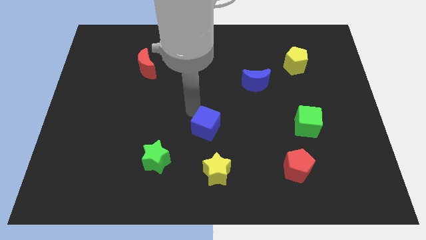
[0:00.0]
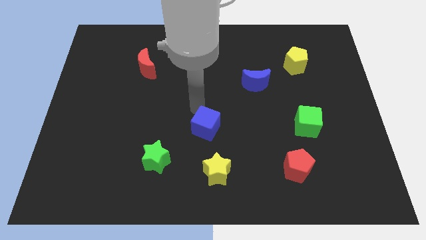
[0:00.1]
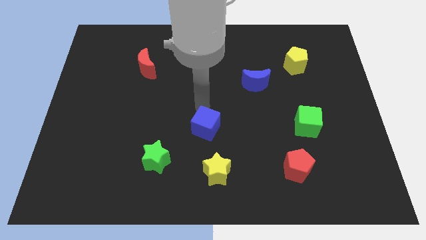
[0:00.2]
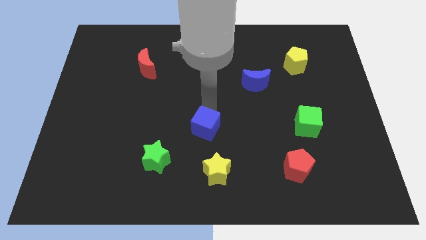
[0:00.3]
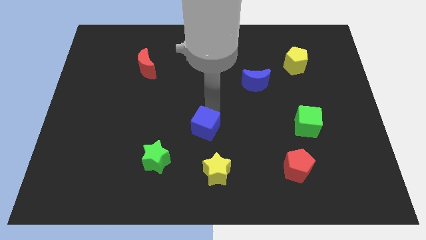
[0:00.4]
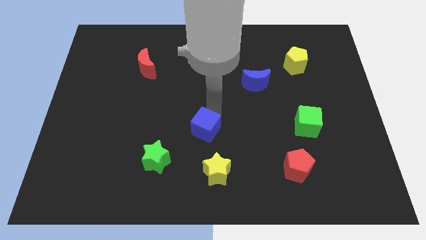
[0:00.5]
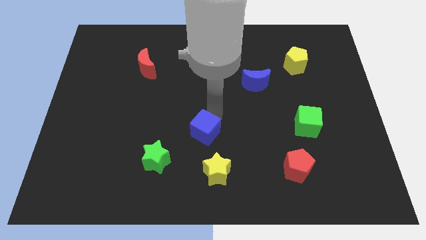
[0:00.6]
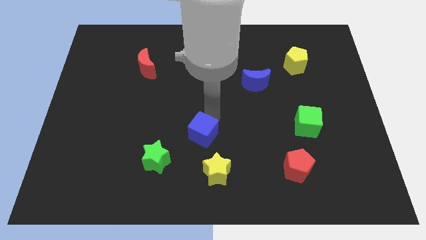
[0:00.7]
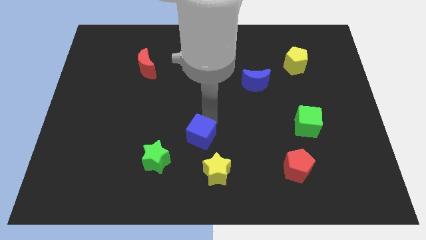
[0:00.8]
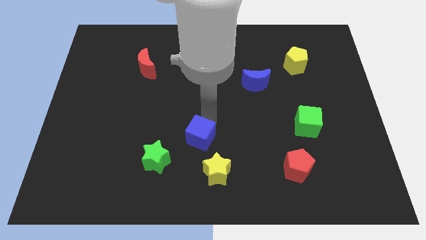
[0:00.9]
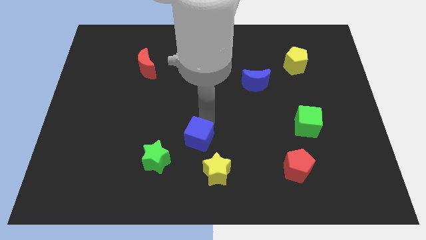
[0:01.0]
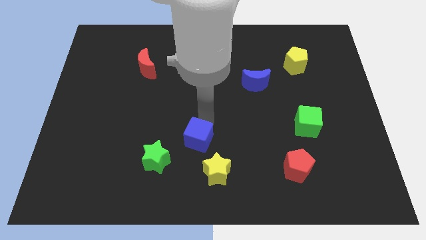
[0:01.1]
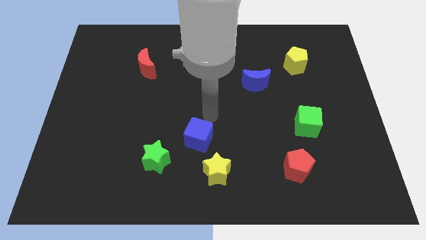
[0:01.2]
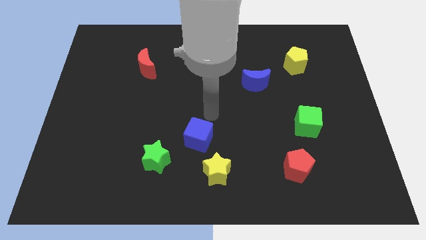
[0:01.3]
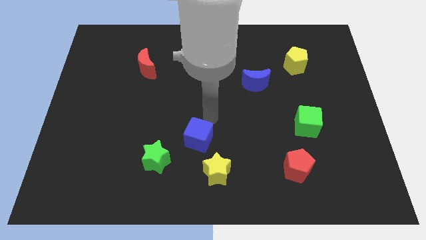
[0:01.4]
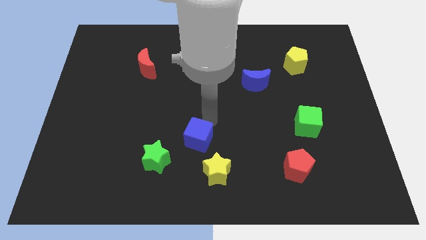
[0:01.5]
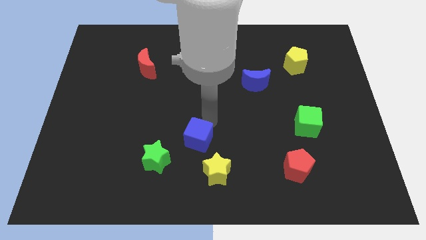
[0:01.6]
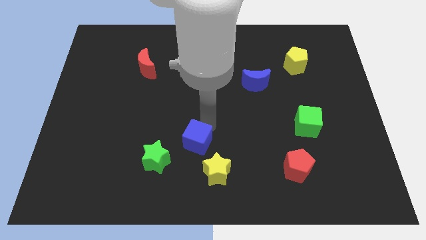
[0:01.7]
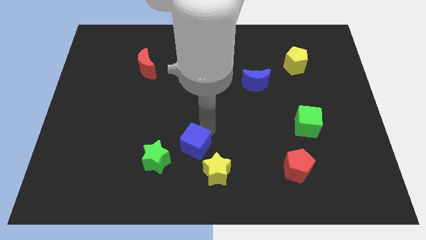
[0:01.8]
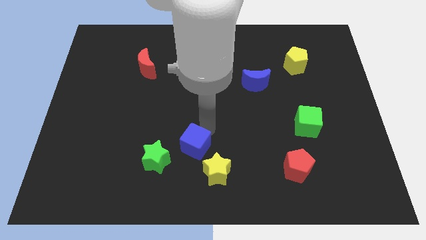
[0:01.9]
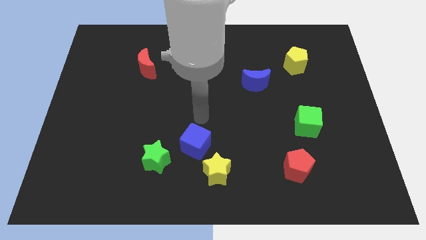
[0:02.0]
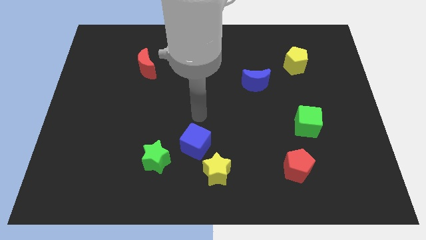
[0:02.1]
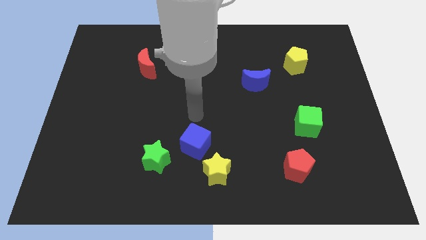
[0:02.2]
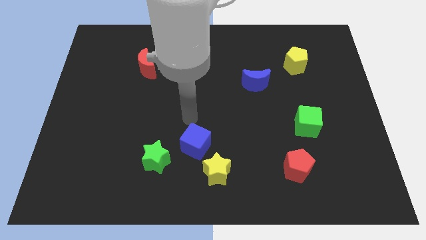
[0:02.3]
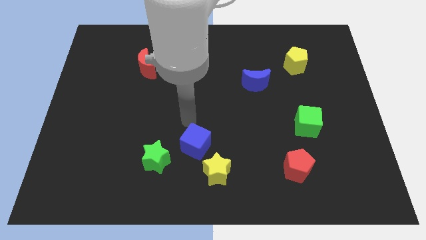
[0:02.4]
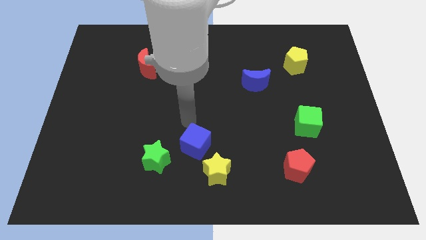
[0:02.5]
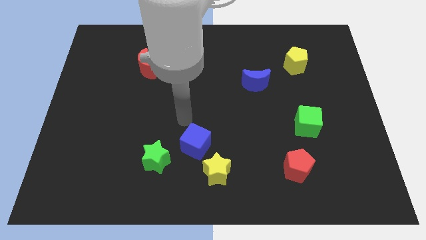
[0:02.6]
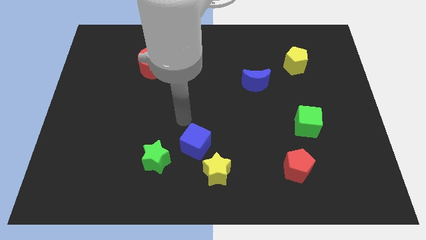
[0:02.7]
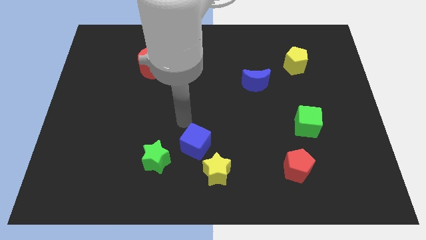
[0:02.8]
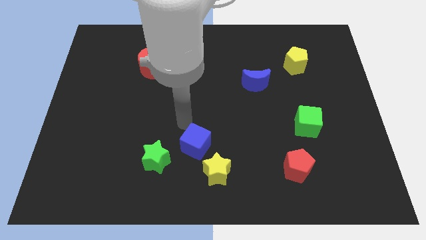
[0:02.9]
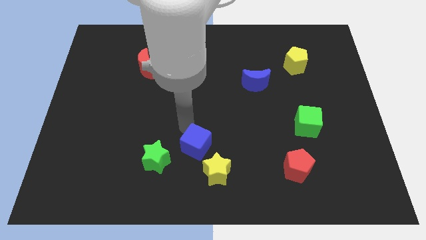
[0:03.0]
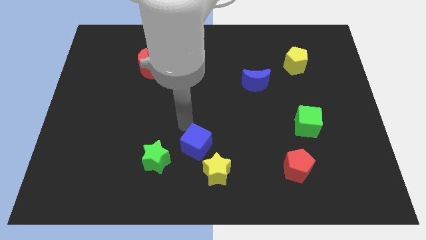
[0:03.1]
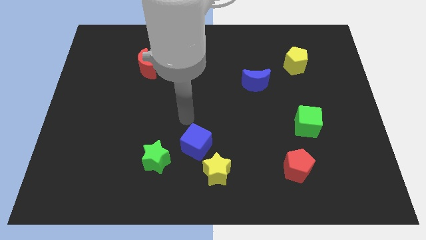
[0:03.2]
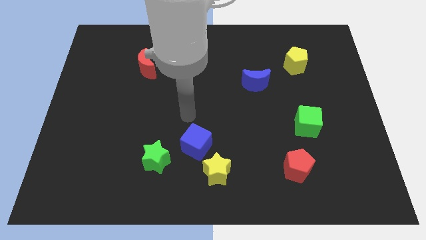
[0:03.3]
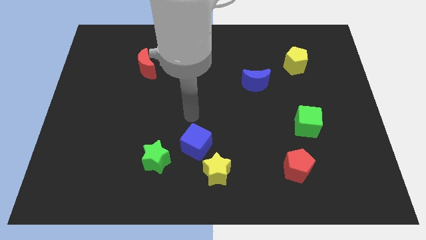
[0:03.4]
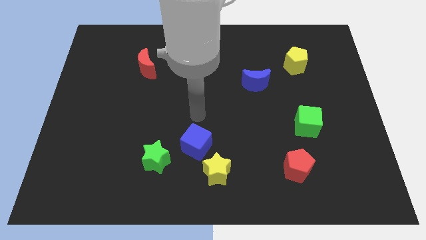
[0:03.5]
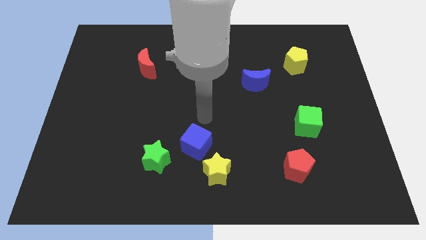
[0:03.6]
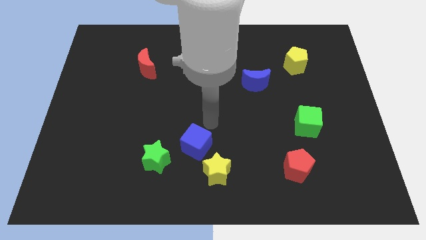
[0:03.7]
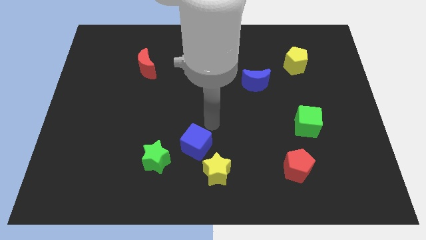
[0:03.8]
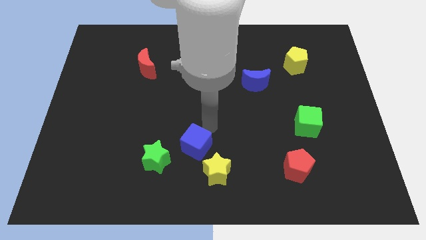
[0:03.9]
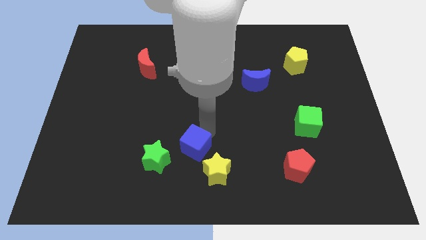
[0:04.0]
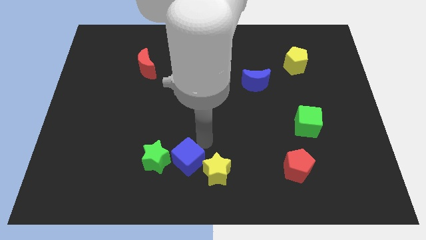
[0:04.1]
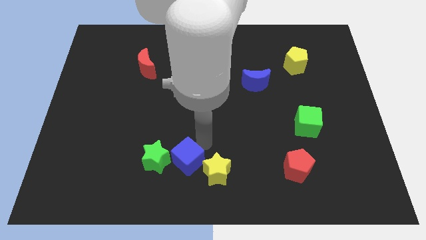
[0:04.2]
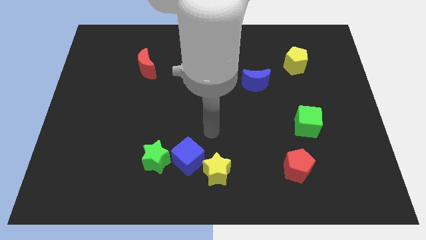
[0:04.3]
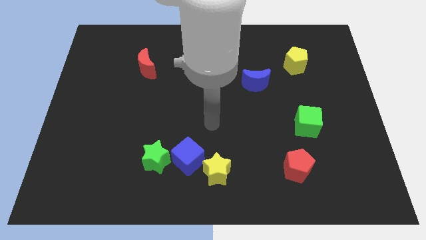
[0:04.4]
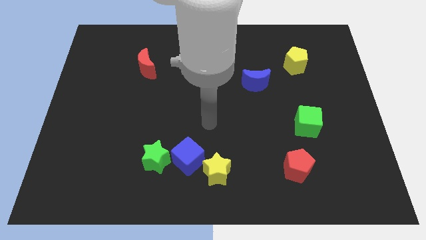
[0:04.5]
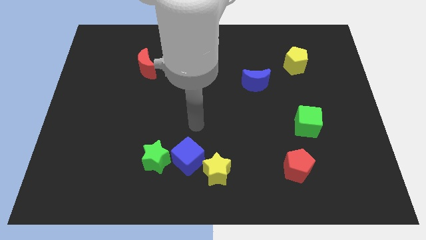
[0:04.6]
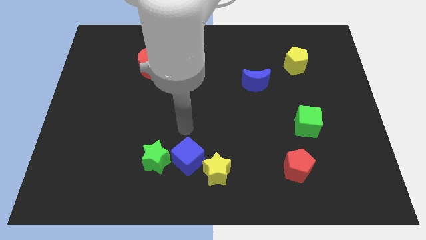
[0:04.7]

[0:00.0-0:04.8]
put the blue cube in between the green and yellow stars

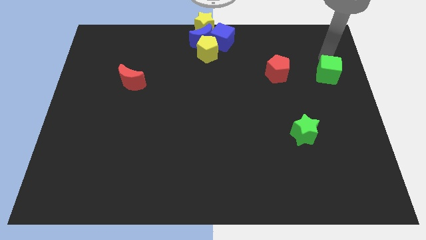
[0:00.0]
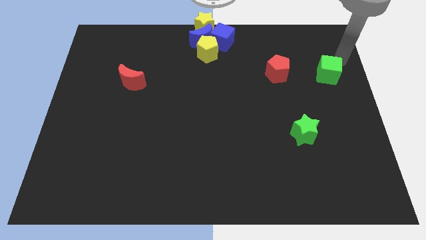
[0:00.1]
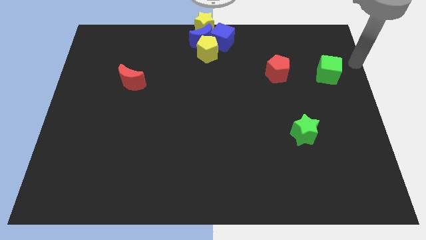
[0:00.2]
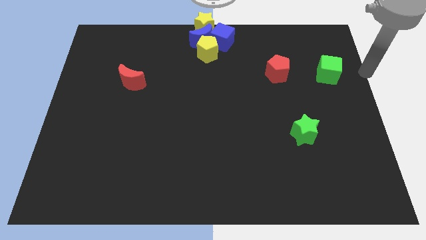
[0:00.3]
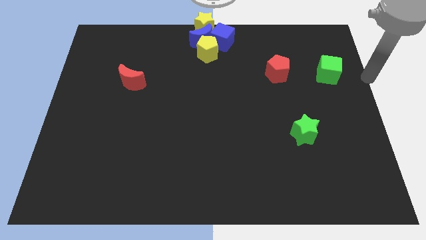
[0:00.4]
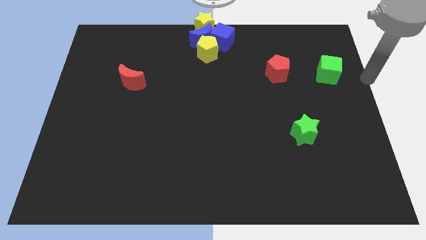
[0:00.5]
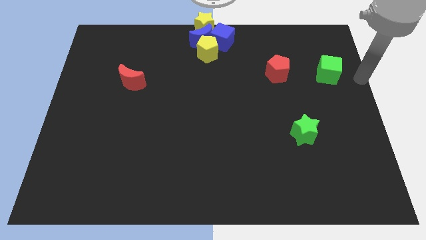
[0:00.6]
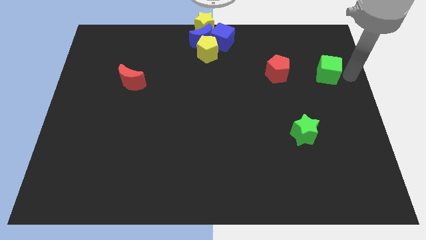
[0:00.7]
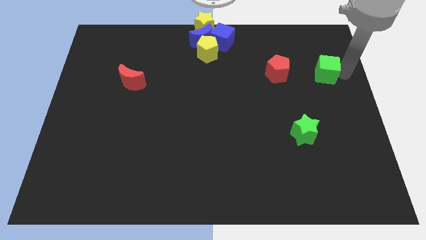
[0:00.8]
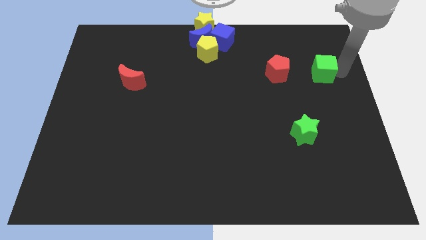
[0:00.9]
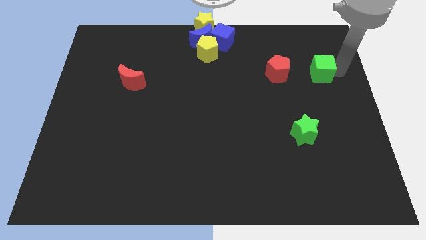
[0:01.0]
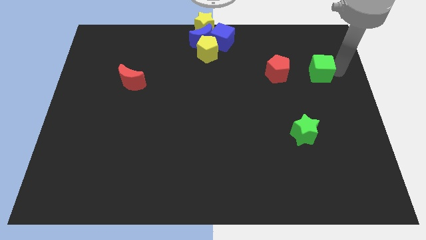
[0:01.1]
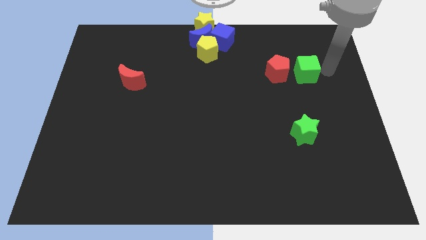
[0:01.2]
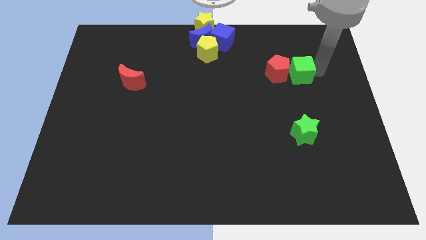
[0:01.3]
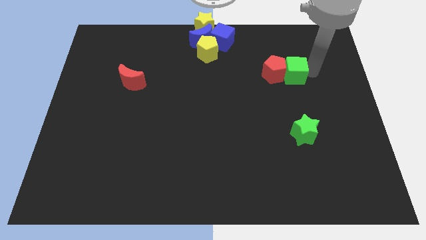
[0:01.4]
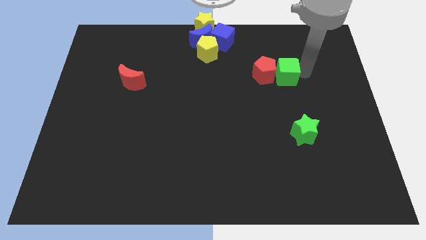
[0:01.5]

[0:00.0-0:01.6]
move the green cube into the red penatgon

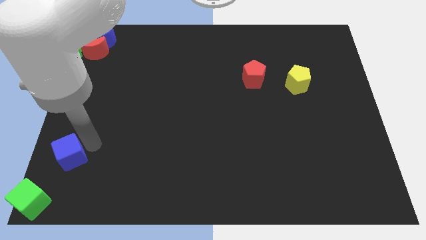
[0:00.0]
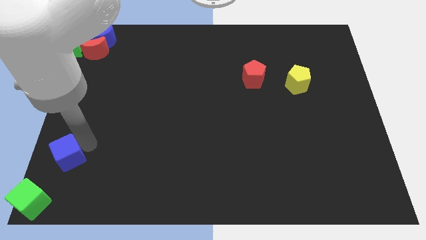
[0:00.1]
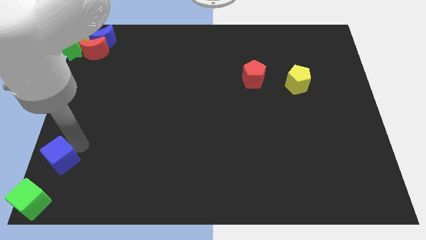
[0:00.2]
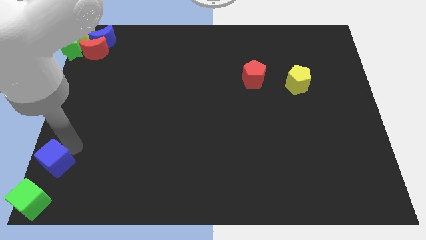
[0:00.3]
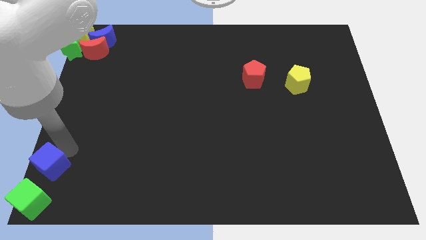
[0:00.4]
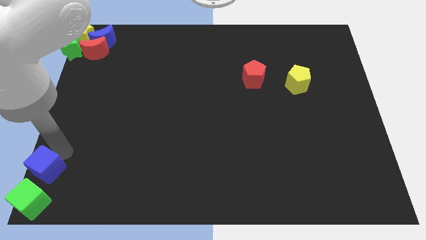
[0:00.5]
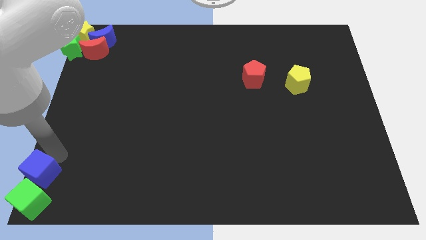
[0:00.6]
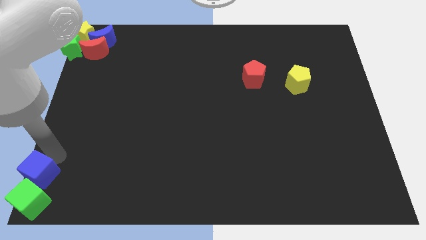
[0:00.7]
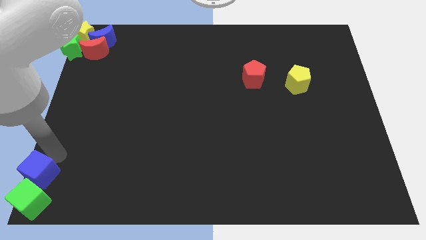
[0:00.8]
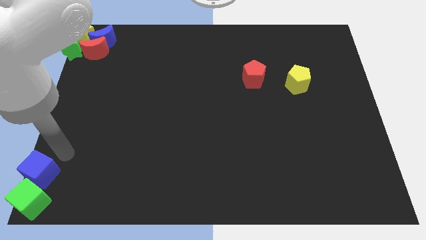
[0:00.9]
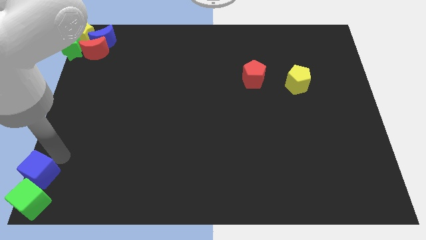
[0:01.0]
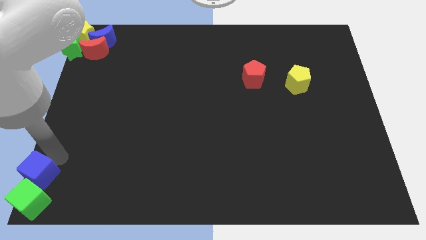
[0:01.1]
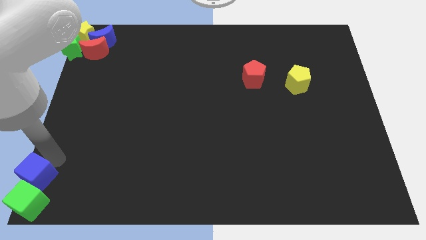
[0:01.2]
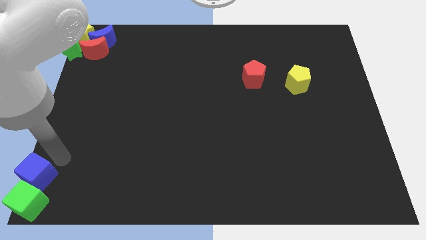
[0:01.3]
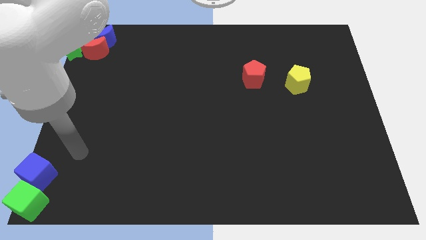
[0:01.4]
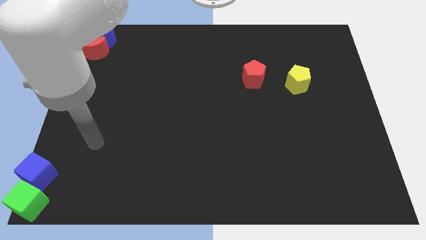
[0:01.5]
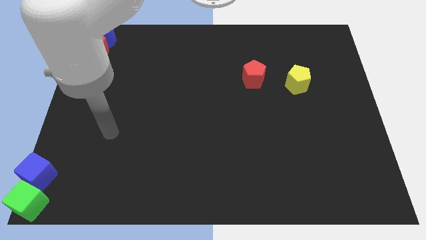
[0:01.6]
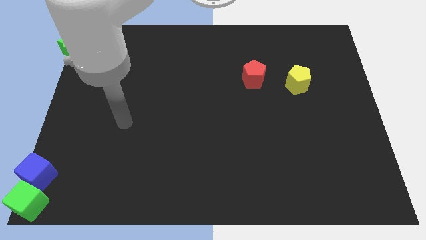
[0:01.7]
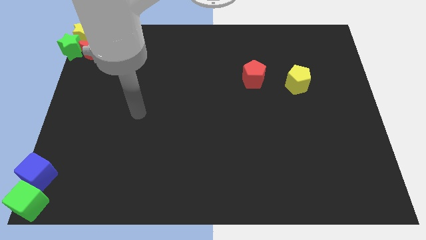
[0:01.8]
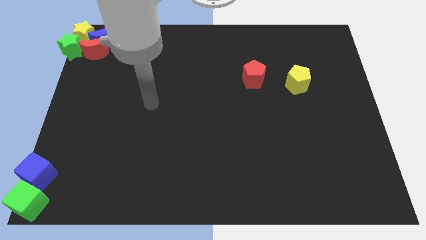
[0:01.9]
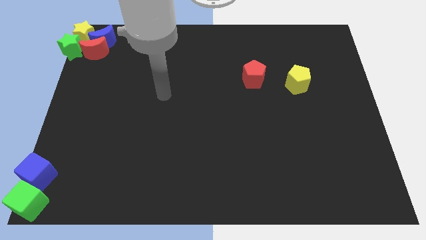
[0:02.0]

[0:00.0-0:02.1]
place the blue cube to the top of the green cube

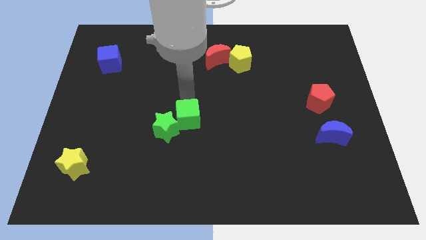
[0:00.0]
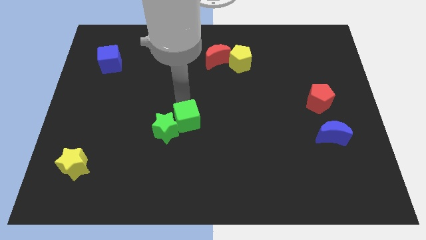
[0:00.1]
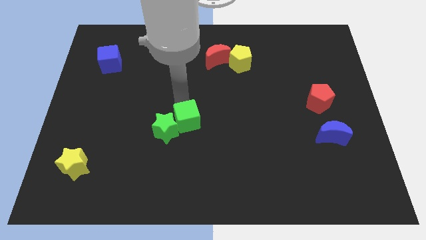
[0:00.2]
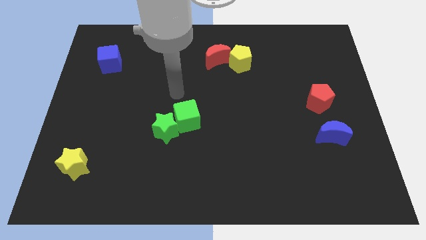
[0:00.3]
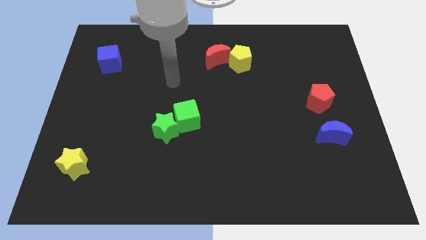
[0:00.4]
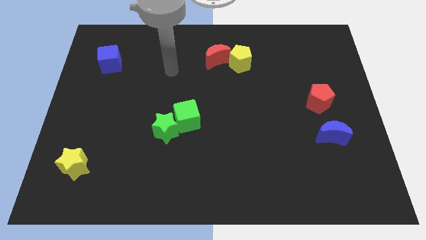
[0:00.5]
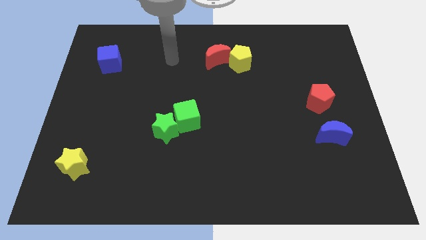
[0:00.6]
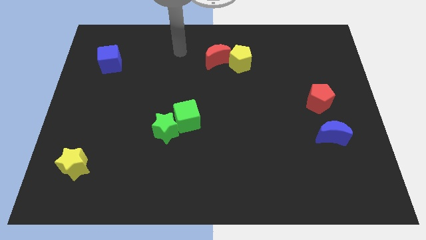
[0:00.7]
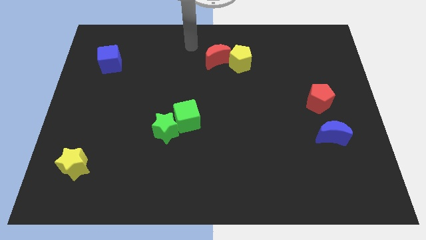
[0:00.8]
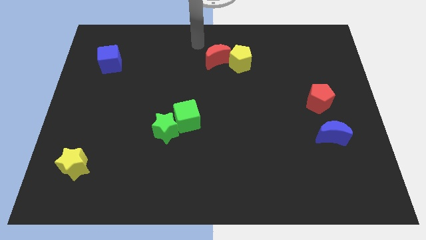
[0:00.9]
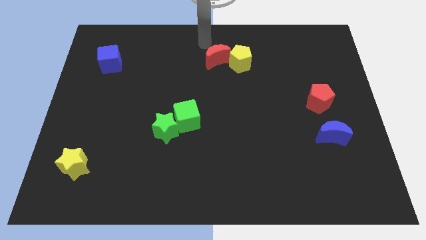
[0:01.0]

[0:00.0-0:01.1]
move your hand away from green cube
